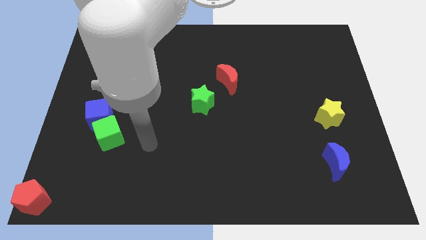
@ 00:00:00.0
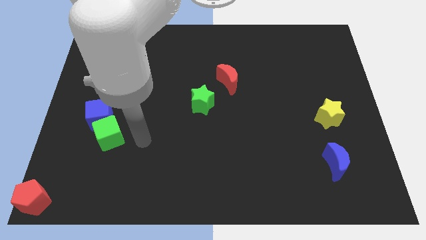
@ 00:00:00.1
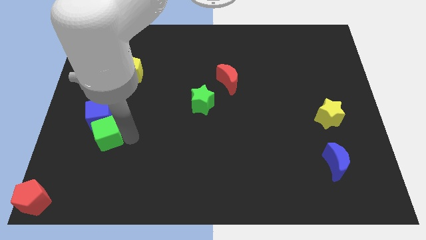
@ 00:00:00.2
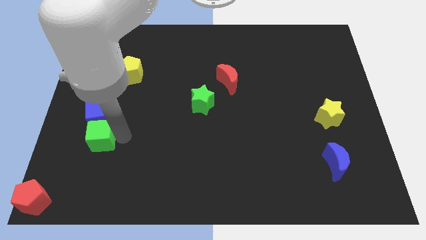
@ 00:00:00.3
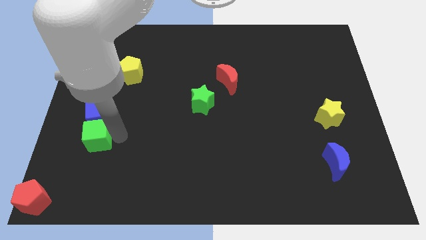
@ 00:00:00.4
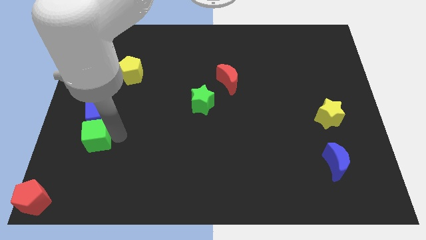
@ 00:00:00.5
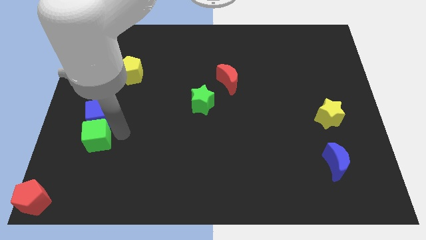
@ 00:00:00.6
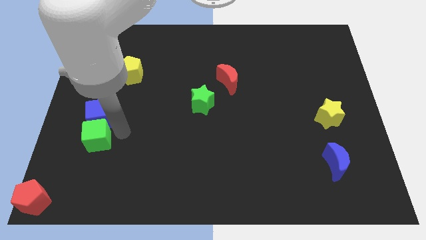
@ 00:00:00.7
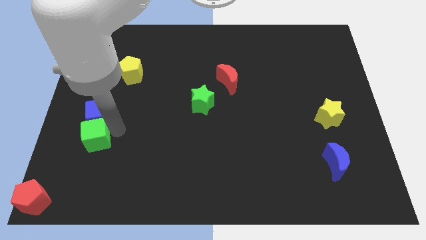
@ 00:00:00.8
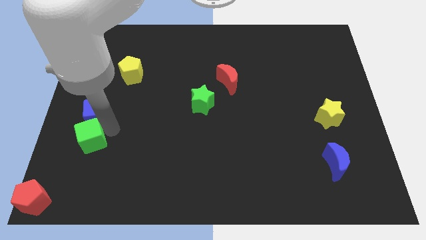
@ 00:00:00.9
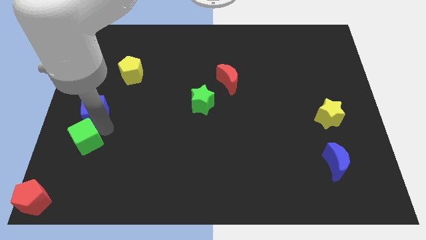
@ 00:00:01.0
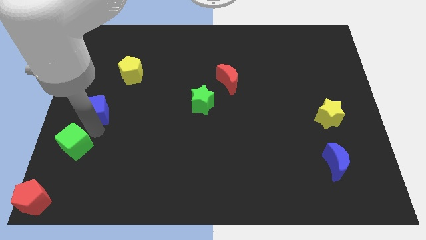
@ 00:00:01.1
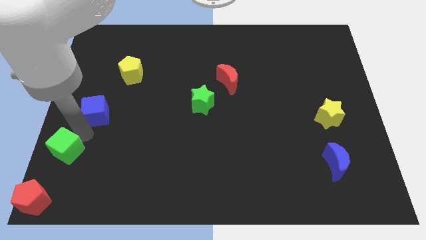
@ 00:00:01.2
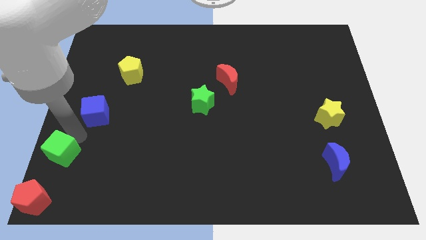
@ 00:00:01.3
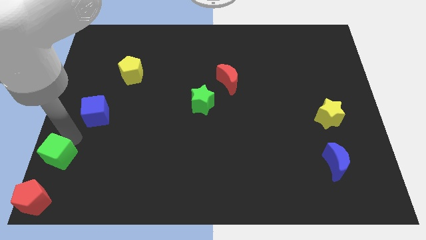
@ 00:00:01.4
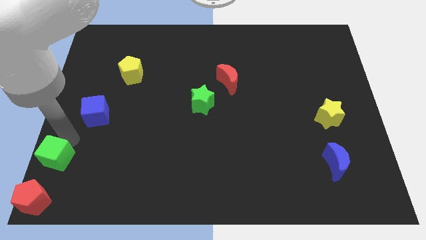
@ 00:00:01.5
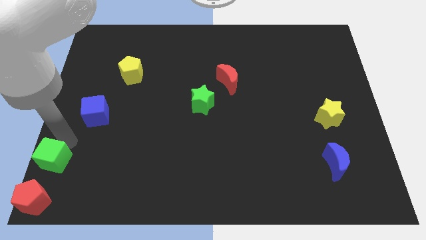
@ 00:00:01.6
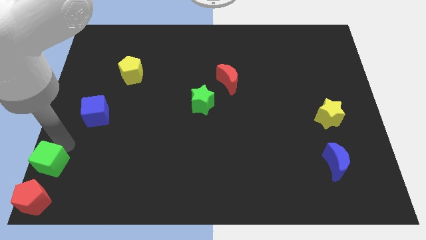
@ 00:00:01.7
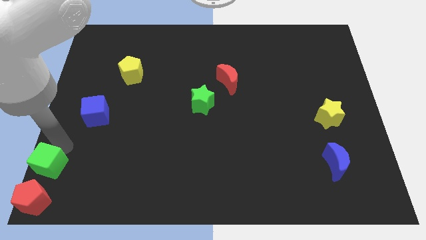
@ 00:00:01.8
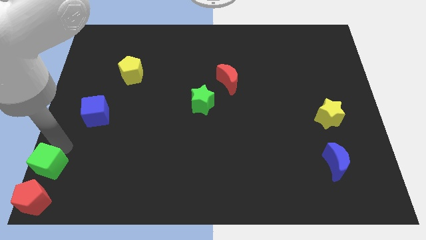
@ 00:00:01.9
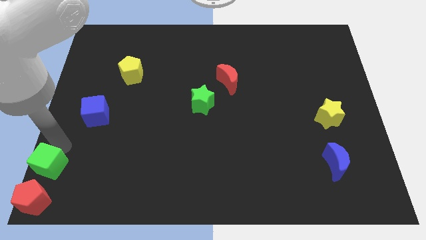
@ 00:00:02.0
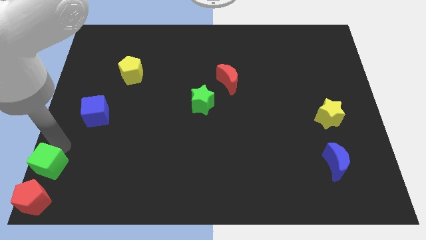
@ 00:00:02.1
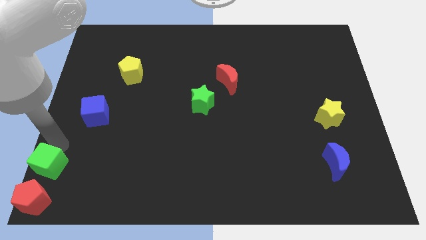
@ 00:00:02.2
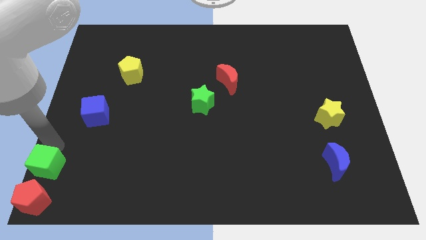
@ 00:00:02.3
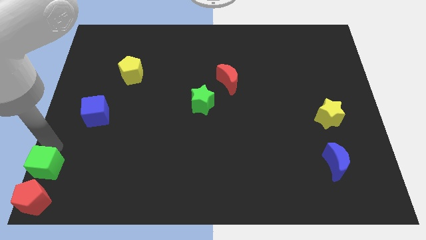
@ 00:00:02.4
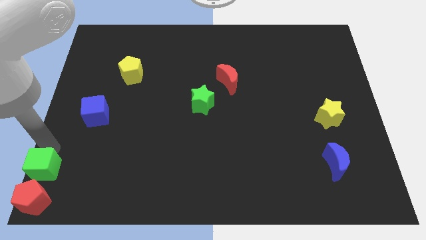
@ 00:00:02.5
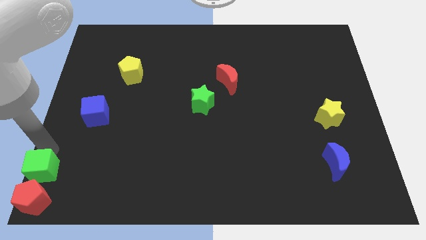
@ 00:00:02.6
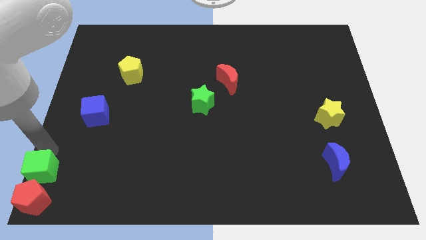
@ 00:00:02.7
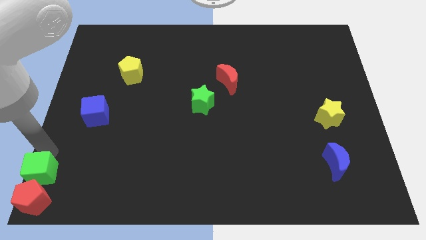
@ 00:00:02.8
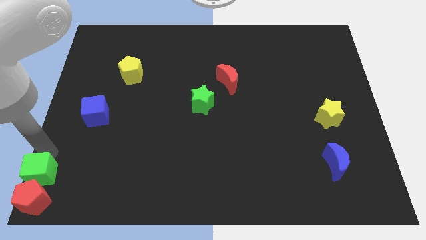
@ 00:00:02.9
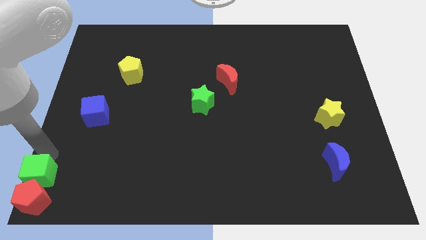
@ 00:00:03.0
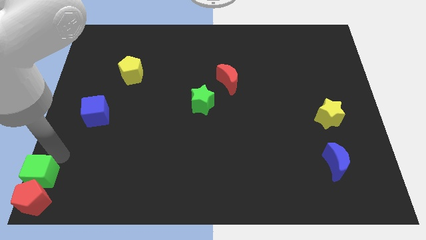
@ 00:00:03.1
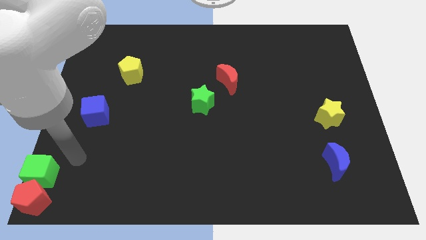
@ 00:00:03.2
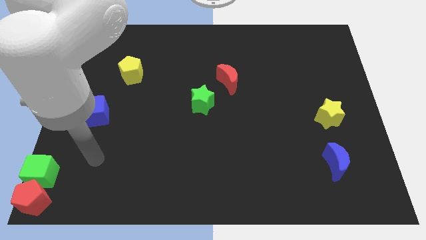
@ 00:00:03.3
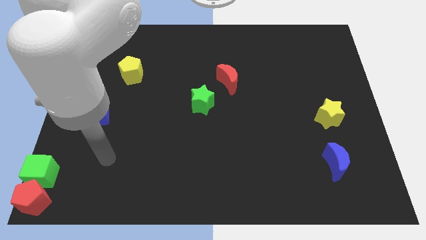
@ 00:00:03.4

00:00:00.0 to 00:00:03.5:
place the green cube above the red pentagon

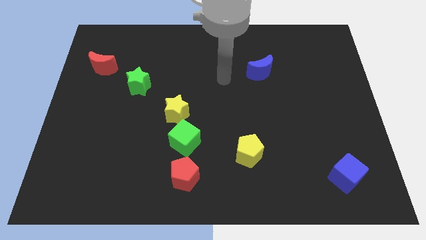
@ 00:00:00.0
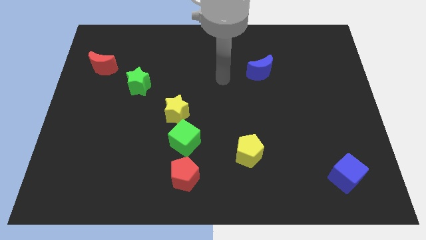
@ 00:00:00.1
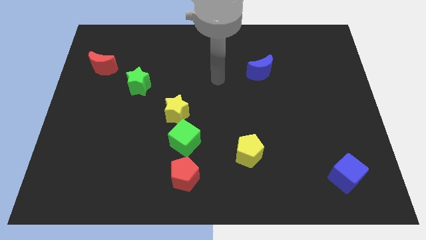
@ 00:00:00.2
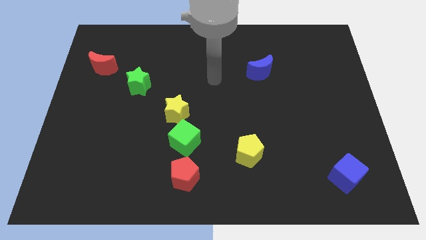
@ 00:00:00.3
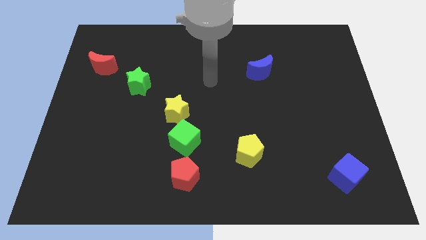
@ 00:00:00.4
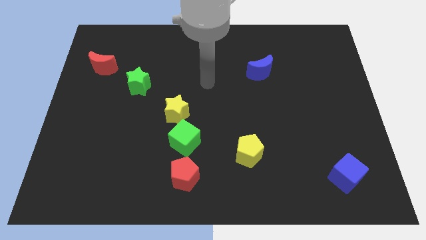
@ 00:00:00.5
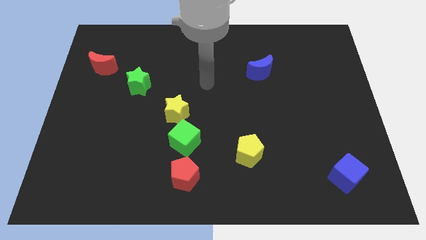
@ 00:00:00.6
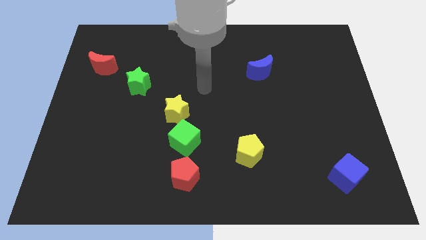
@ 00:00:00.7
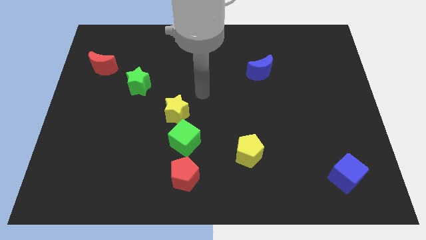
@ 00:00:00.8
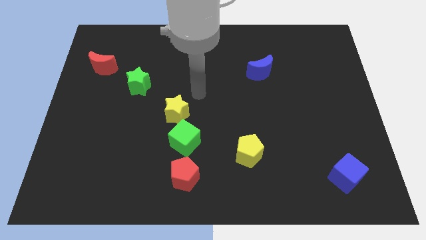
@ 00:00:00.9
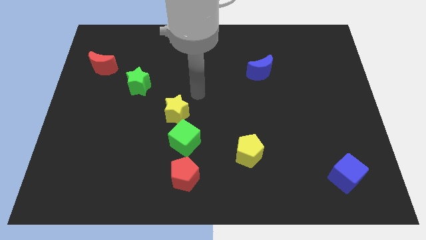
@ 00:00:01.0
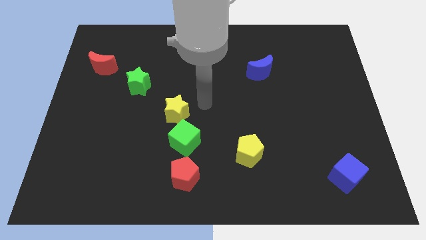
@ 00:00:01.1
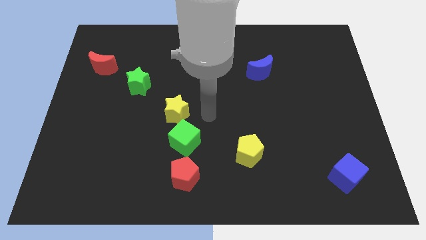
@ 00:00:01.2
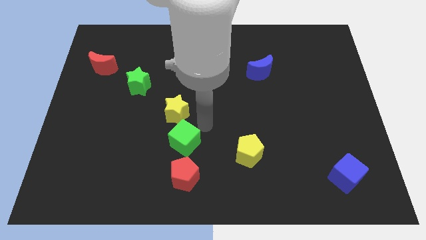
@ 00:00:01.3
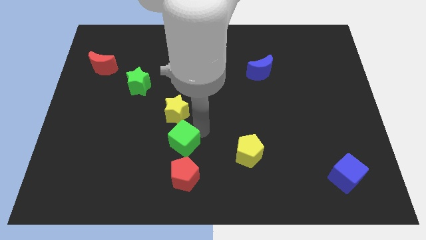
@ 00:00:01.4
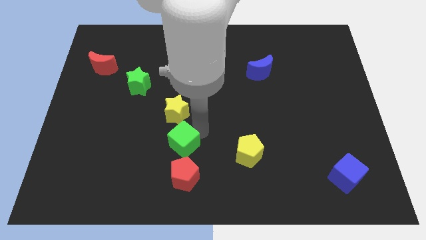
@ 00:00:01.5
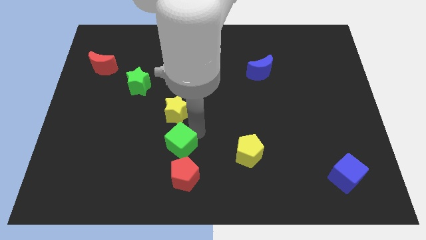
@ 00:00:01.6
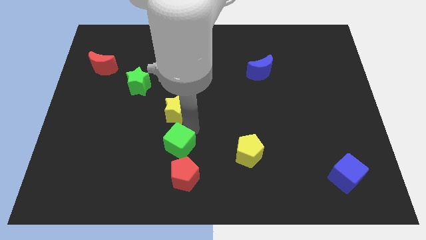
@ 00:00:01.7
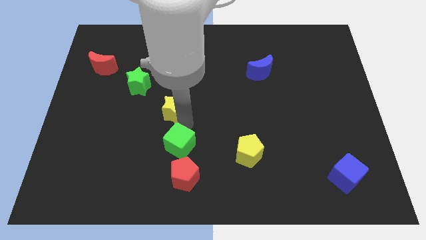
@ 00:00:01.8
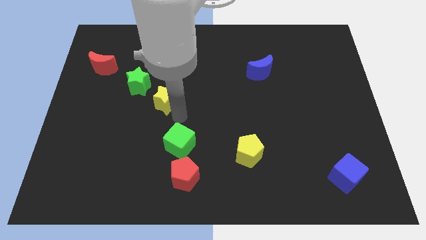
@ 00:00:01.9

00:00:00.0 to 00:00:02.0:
separate yellow star from the green cube

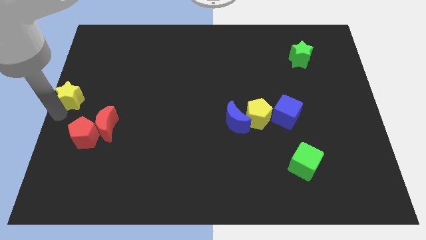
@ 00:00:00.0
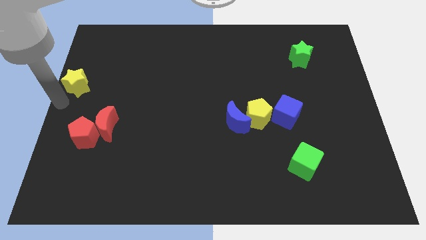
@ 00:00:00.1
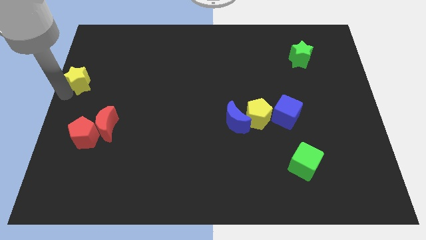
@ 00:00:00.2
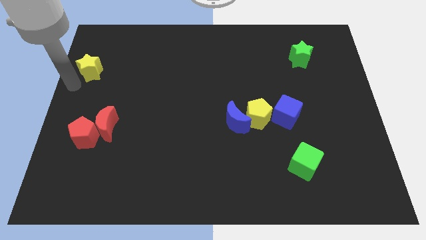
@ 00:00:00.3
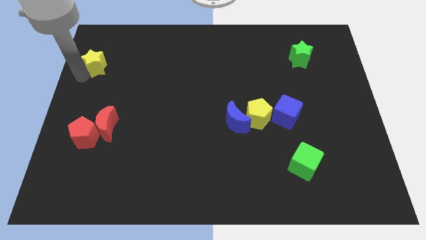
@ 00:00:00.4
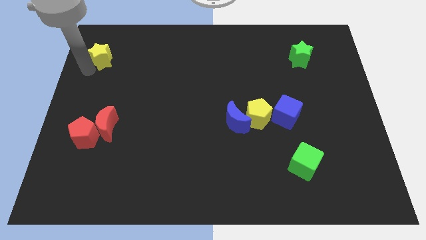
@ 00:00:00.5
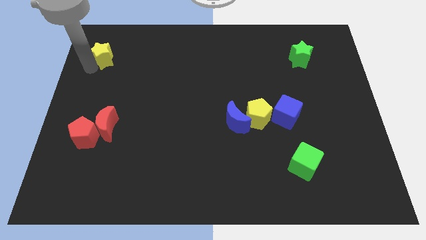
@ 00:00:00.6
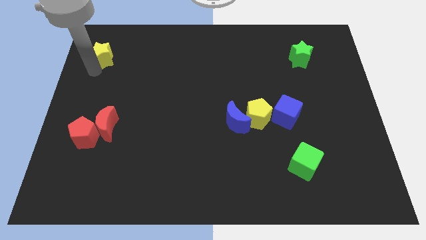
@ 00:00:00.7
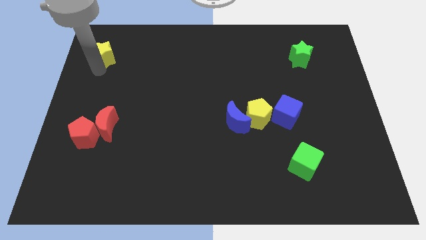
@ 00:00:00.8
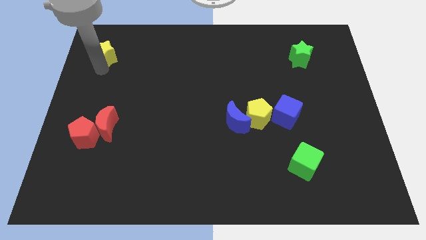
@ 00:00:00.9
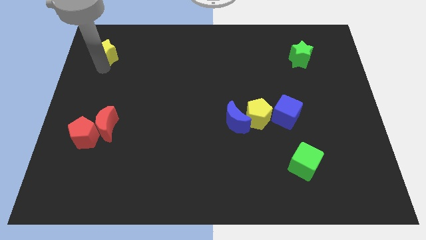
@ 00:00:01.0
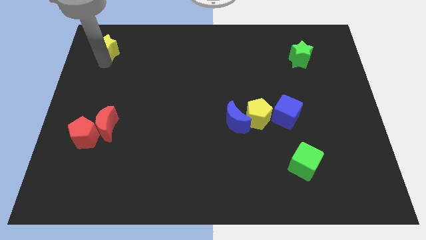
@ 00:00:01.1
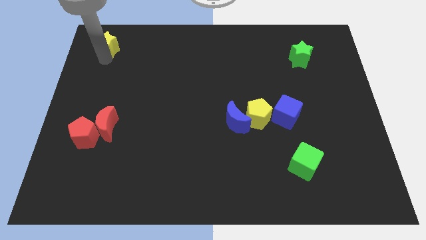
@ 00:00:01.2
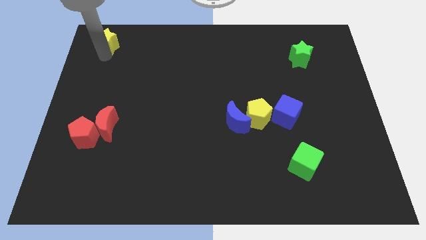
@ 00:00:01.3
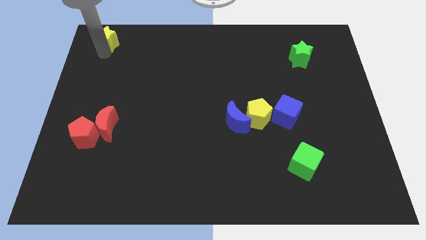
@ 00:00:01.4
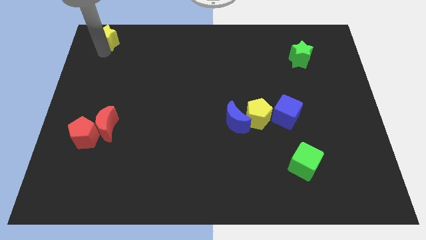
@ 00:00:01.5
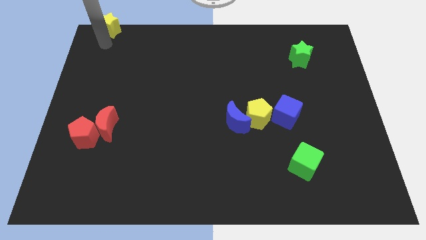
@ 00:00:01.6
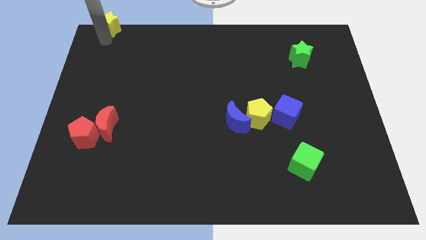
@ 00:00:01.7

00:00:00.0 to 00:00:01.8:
place yellow star towards upside

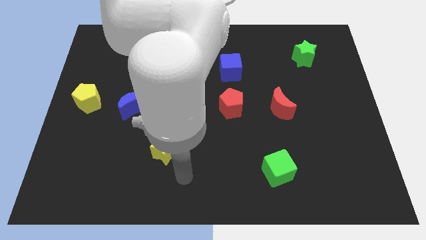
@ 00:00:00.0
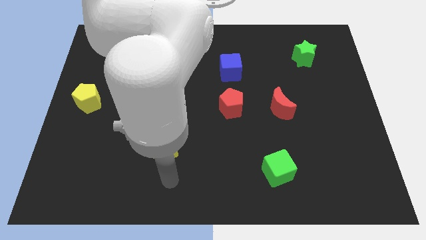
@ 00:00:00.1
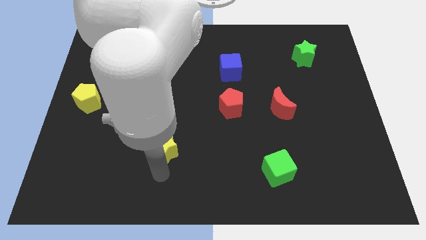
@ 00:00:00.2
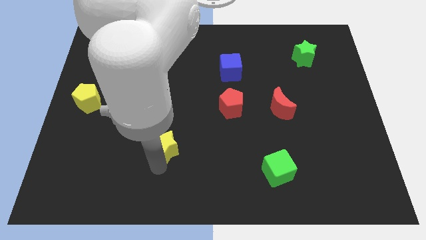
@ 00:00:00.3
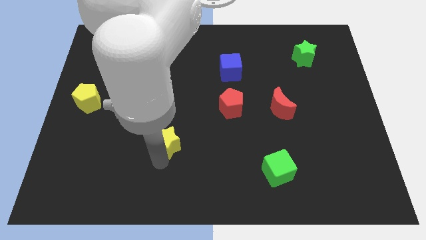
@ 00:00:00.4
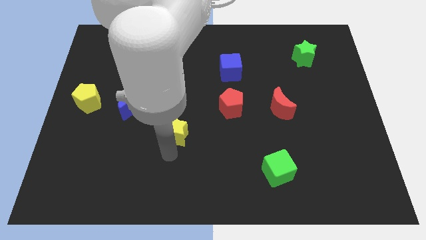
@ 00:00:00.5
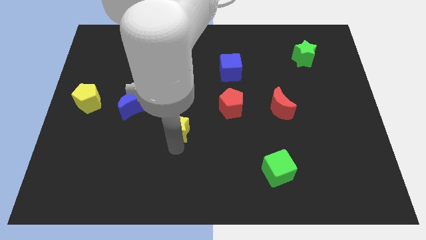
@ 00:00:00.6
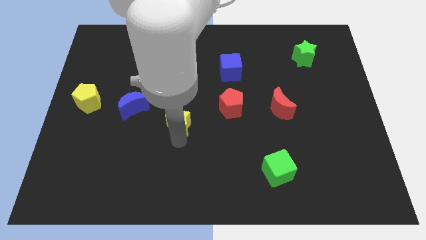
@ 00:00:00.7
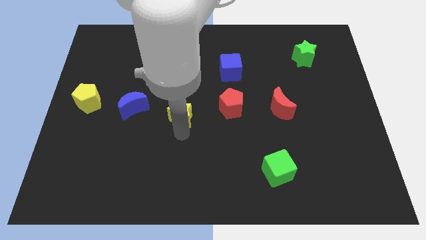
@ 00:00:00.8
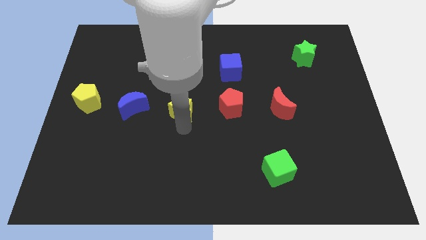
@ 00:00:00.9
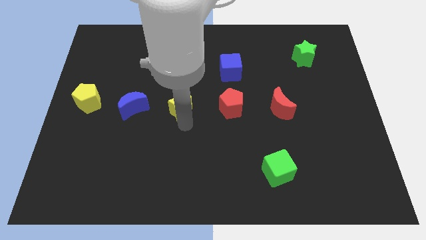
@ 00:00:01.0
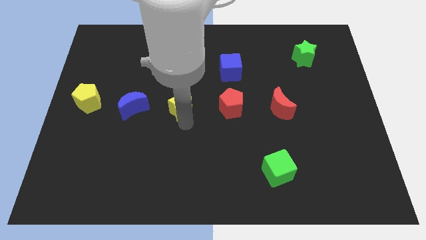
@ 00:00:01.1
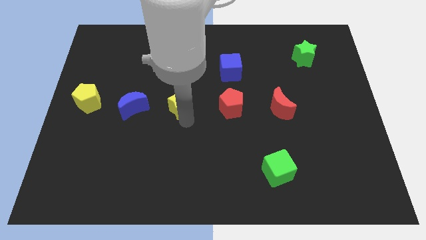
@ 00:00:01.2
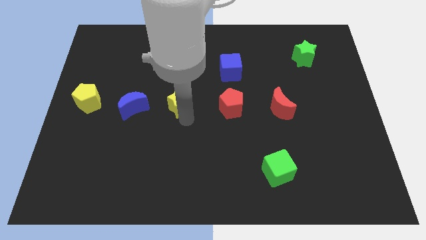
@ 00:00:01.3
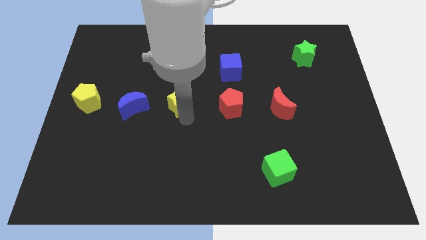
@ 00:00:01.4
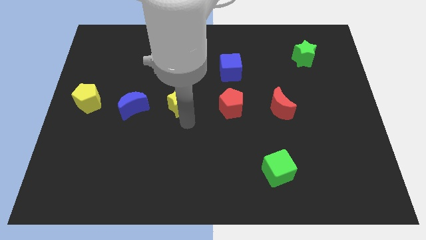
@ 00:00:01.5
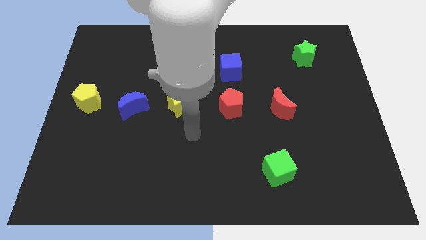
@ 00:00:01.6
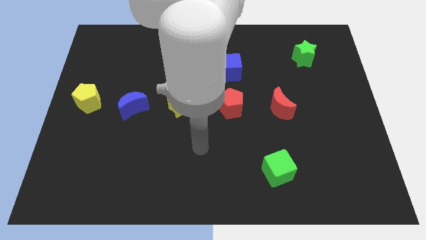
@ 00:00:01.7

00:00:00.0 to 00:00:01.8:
place the yellow star in between red pentagon and blue moon
